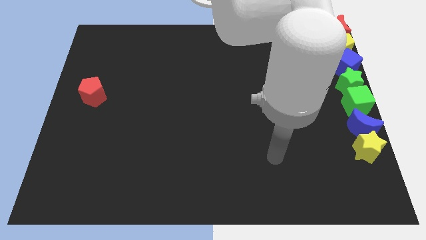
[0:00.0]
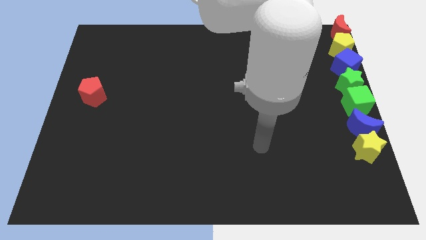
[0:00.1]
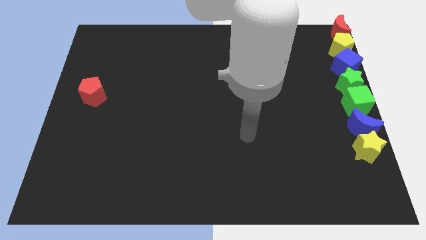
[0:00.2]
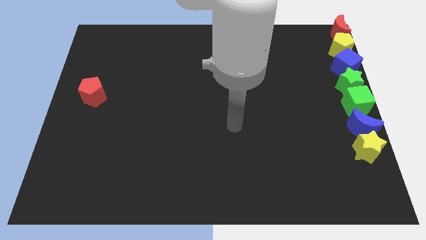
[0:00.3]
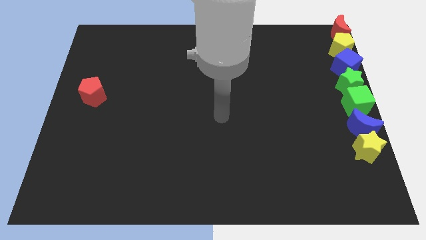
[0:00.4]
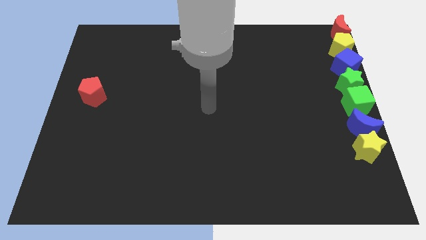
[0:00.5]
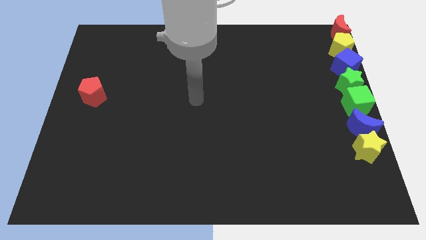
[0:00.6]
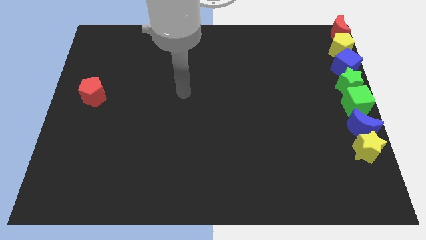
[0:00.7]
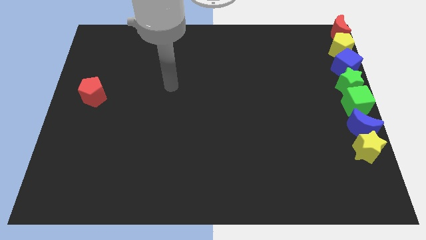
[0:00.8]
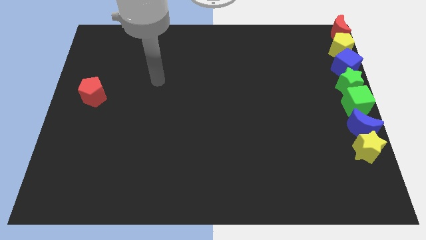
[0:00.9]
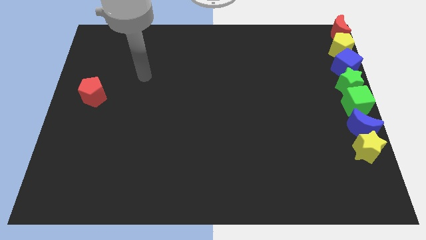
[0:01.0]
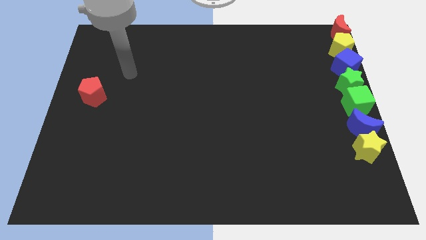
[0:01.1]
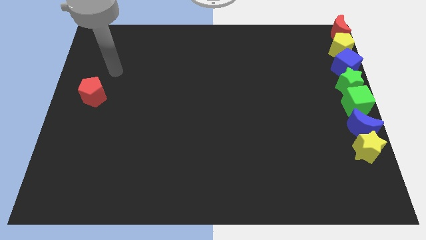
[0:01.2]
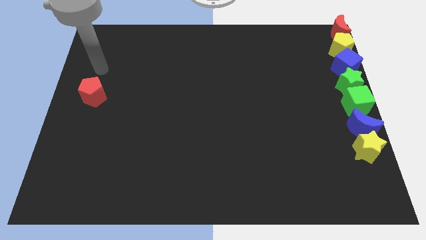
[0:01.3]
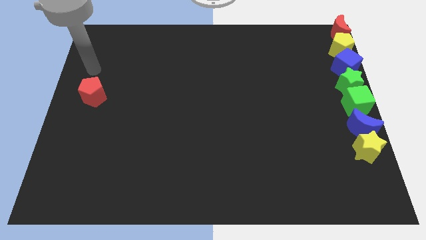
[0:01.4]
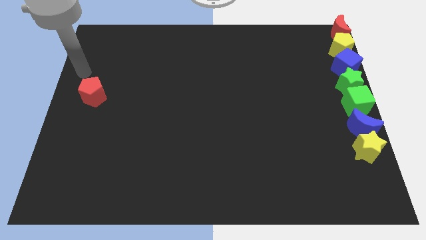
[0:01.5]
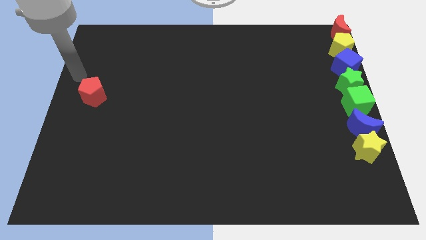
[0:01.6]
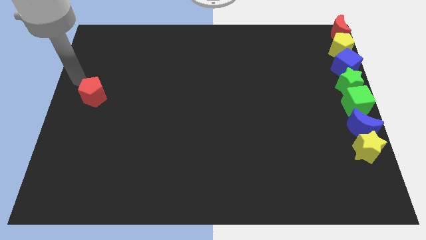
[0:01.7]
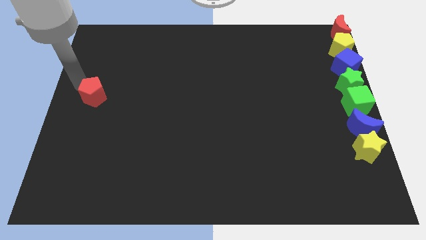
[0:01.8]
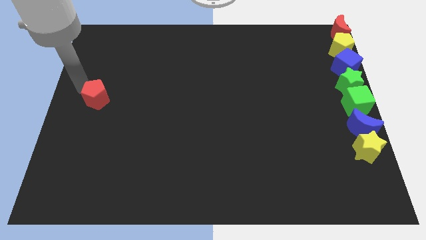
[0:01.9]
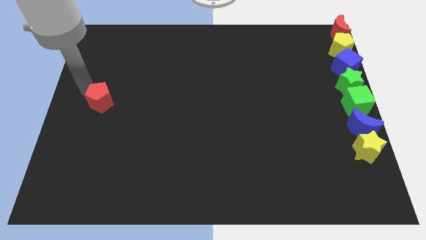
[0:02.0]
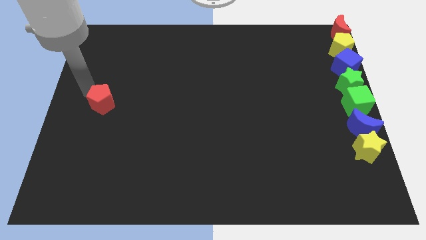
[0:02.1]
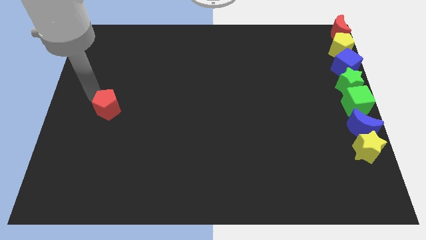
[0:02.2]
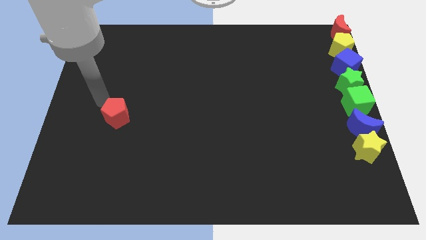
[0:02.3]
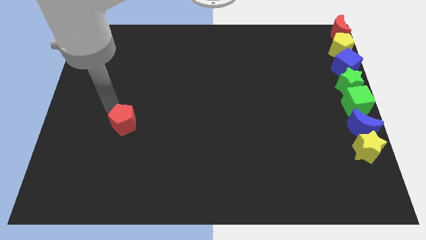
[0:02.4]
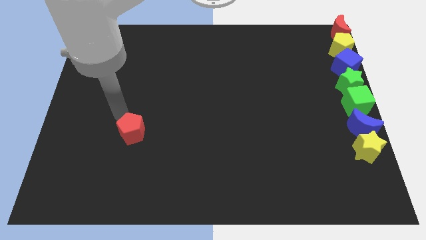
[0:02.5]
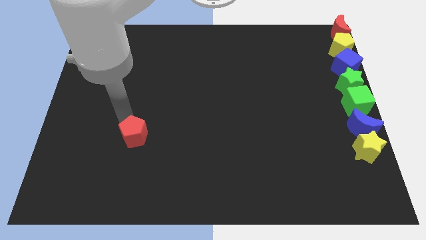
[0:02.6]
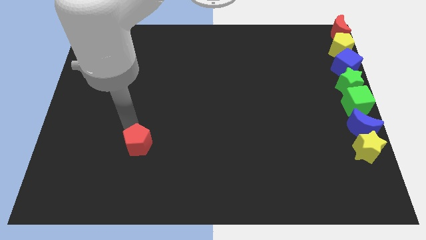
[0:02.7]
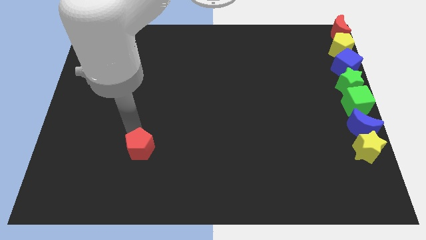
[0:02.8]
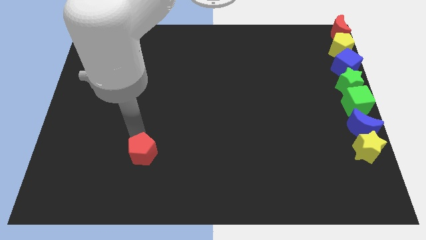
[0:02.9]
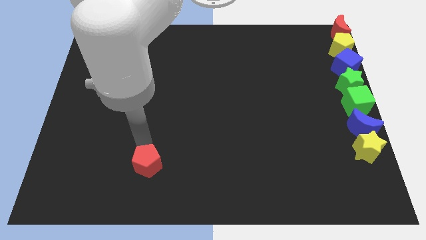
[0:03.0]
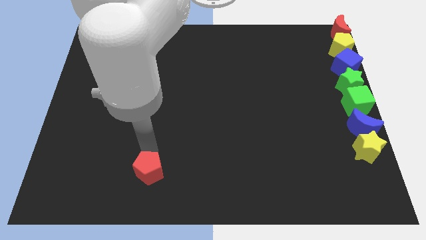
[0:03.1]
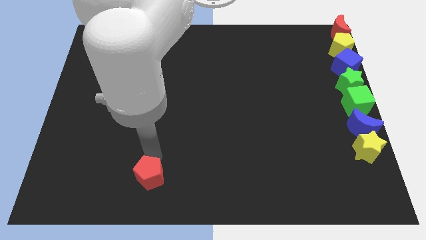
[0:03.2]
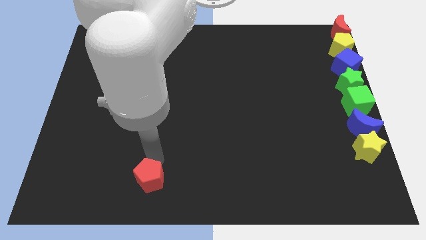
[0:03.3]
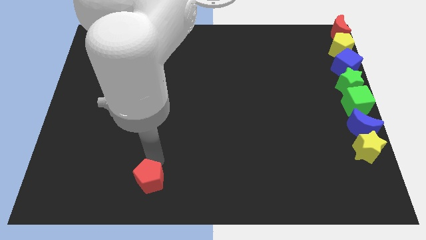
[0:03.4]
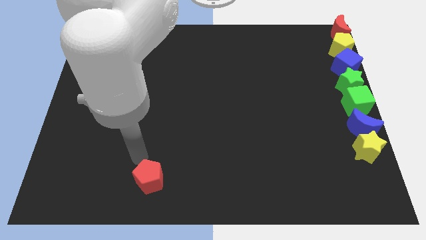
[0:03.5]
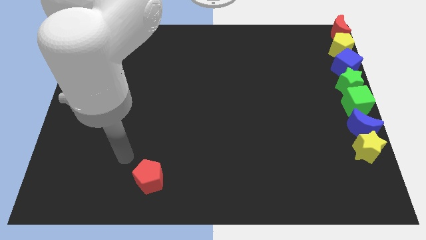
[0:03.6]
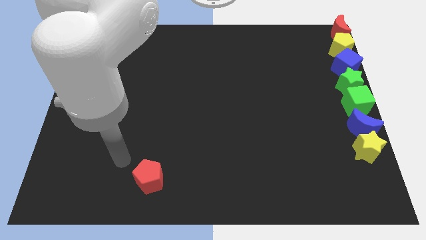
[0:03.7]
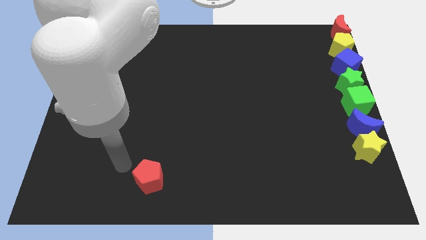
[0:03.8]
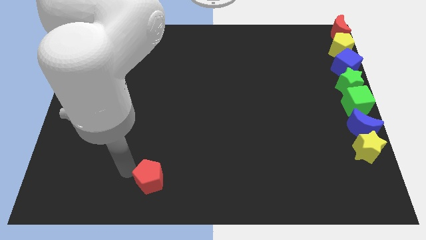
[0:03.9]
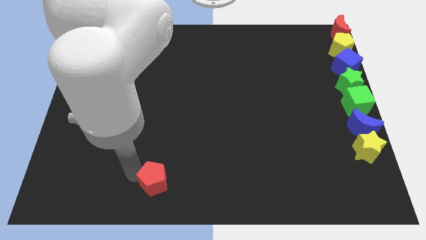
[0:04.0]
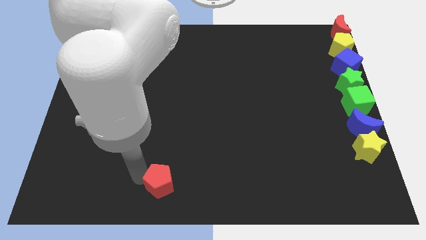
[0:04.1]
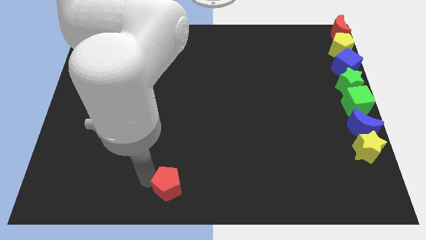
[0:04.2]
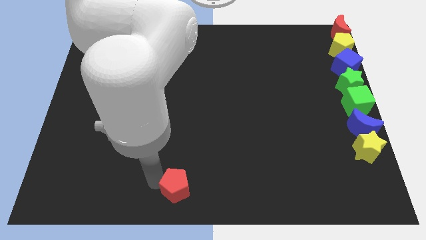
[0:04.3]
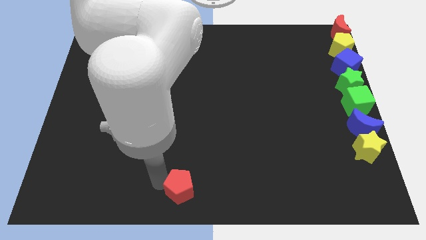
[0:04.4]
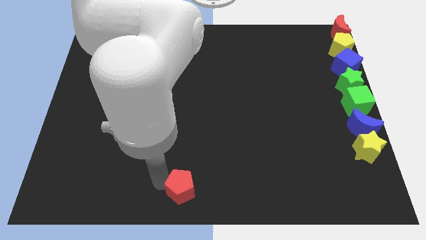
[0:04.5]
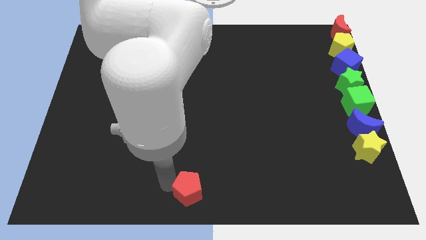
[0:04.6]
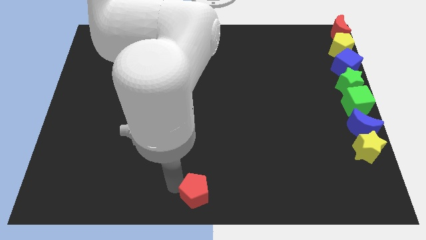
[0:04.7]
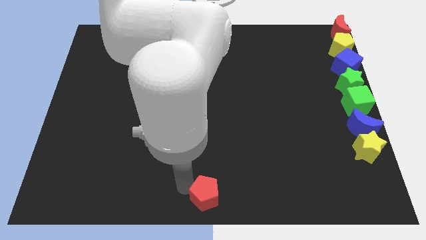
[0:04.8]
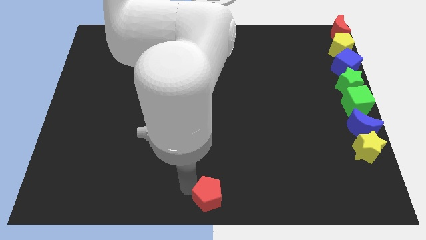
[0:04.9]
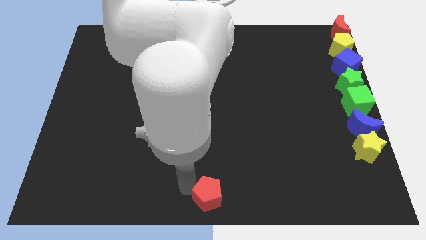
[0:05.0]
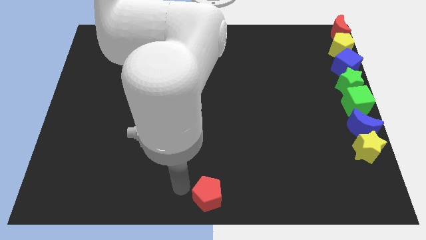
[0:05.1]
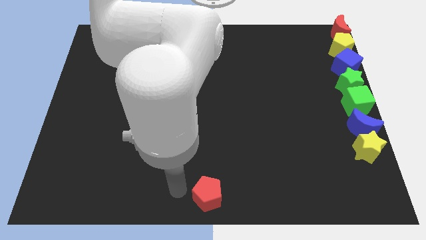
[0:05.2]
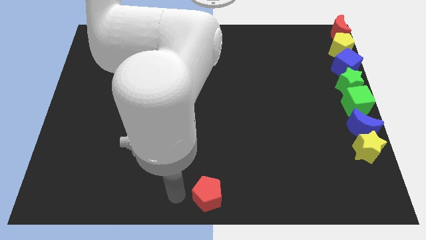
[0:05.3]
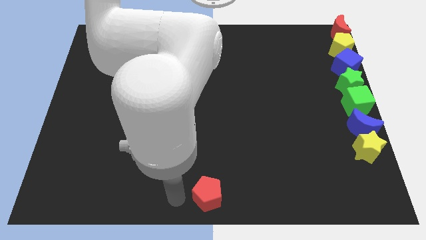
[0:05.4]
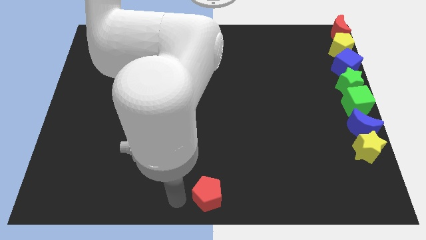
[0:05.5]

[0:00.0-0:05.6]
place the red pentagon at the bottom center of the board

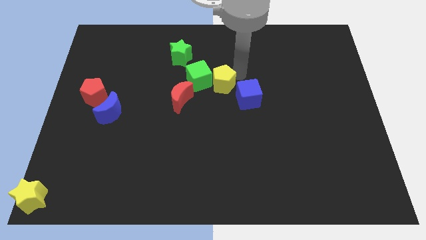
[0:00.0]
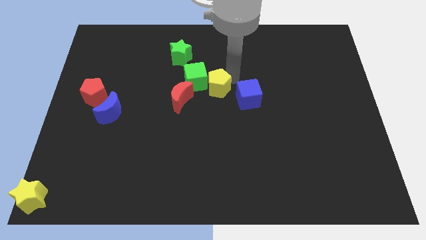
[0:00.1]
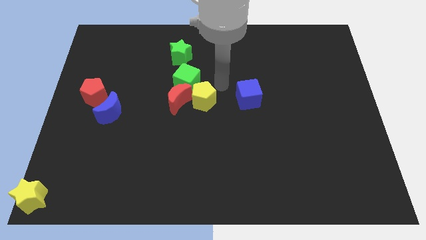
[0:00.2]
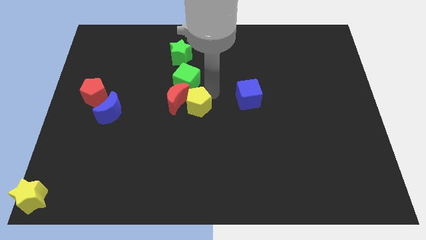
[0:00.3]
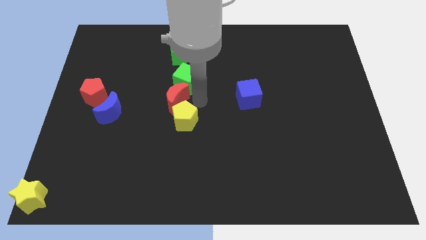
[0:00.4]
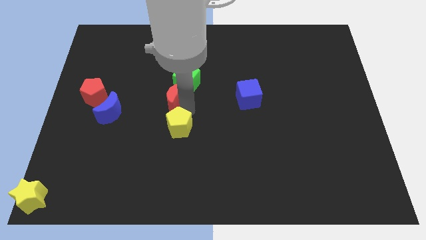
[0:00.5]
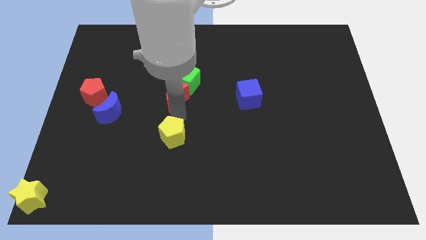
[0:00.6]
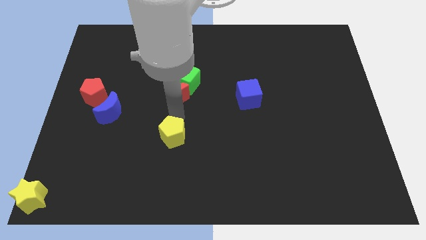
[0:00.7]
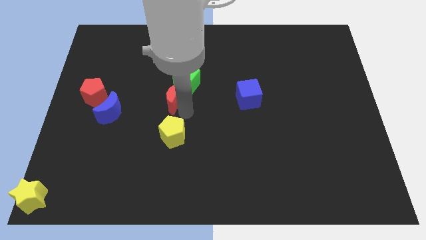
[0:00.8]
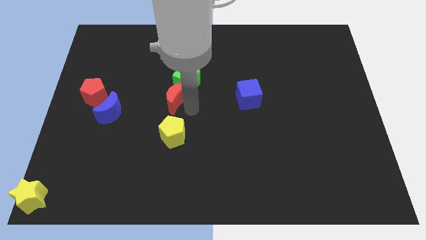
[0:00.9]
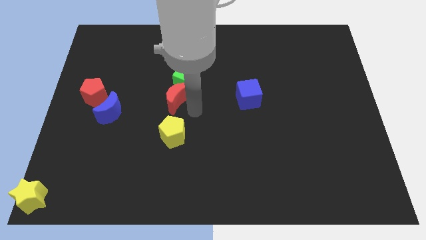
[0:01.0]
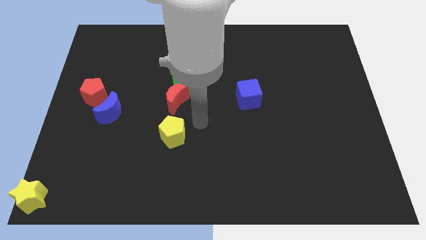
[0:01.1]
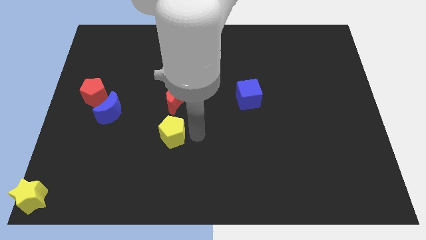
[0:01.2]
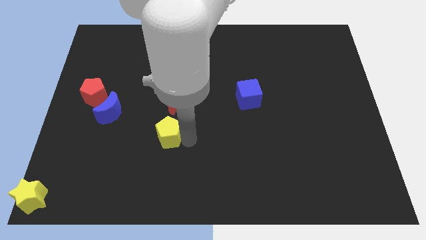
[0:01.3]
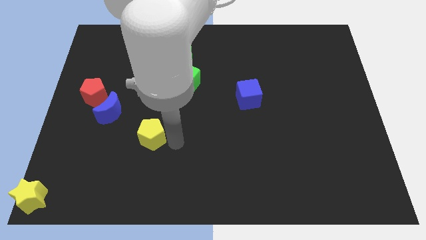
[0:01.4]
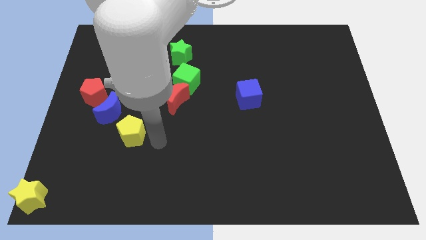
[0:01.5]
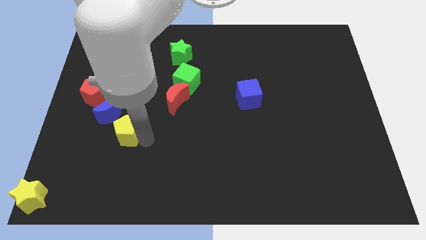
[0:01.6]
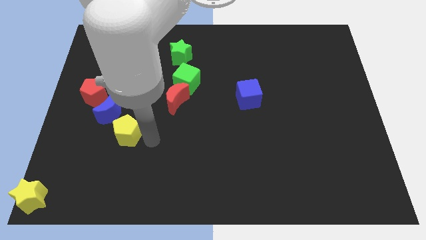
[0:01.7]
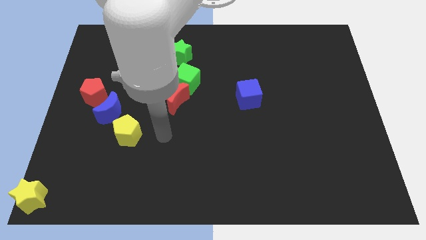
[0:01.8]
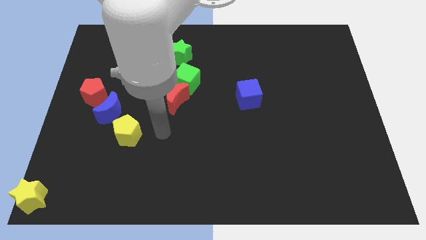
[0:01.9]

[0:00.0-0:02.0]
push the yellow pentagon close to the blue moon

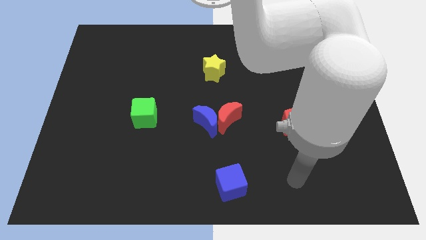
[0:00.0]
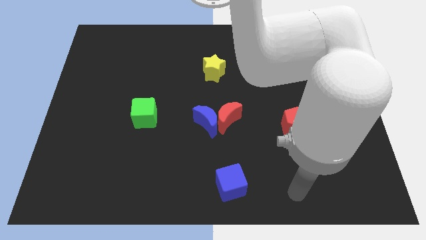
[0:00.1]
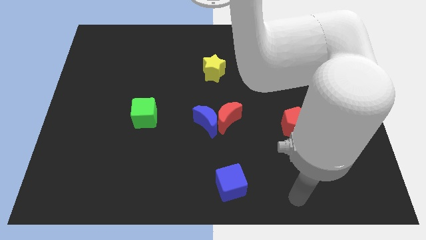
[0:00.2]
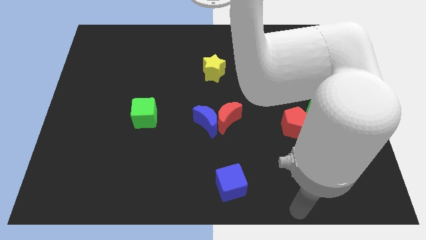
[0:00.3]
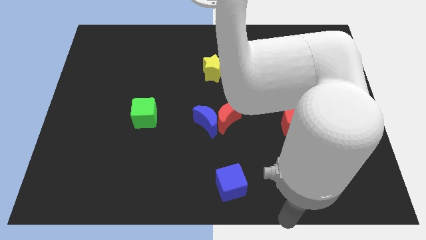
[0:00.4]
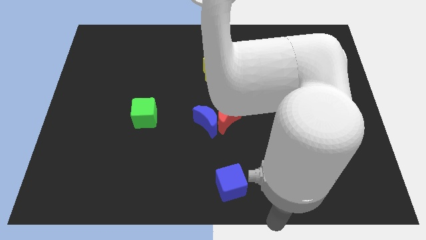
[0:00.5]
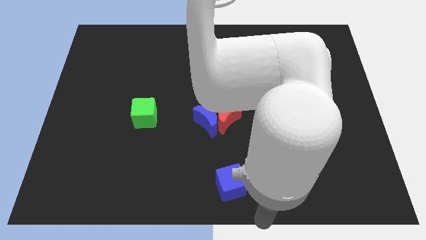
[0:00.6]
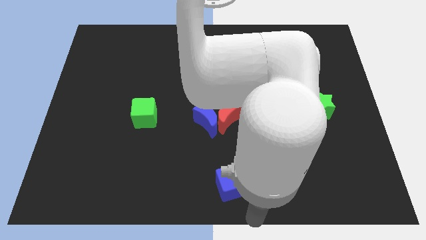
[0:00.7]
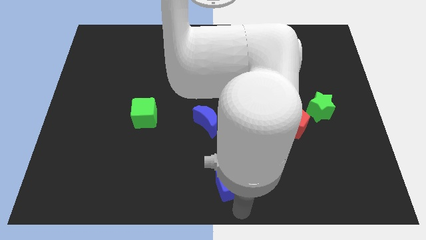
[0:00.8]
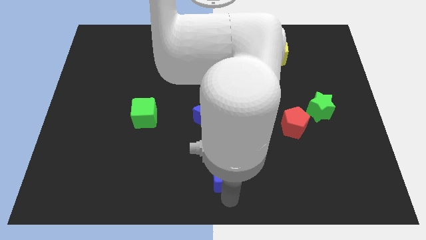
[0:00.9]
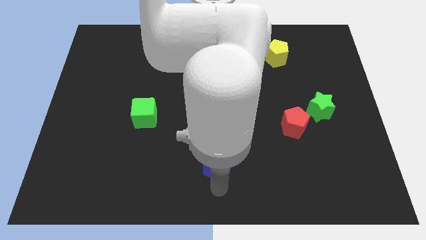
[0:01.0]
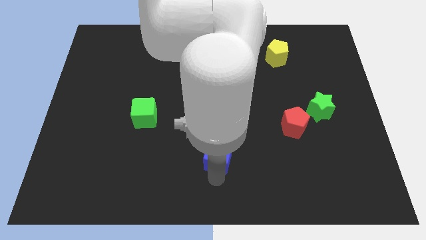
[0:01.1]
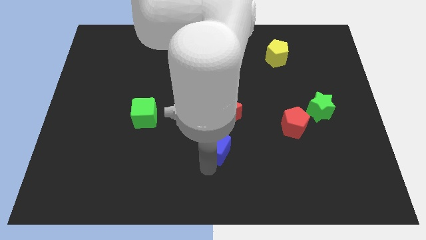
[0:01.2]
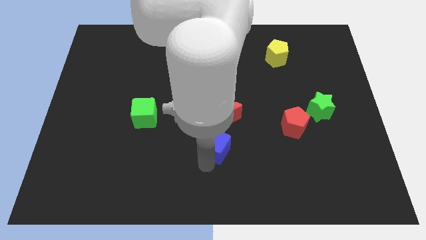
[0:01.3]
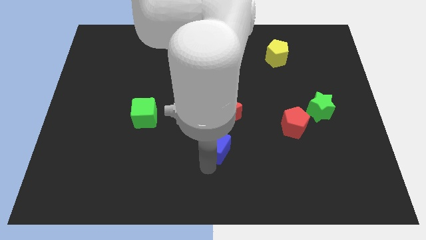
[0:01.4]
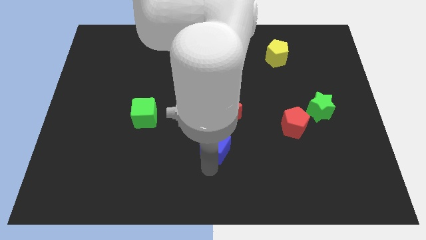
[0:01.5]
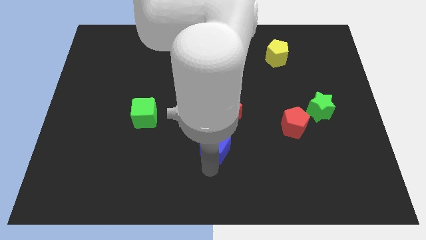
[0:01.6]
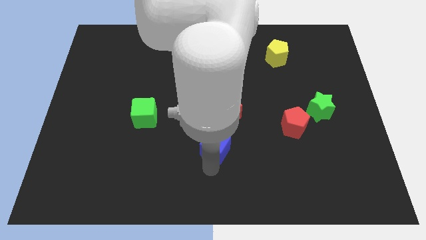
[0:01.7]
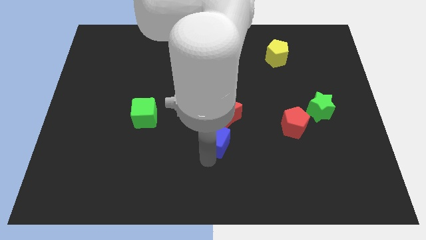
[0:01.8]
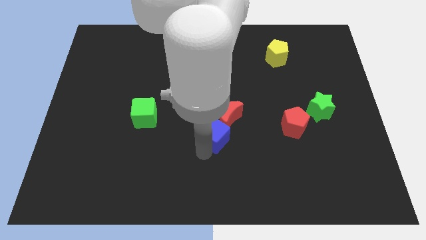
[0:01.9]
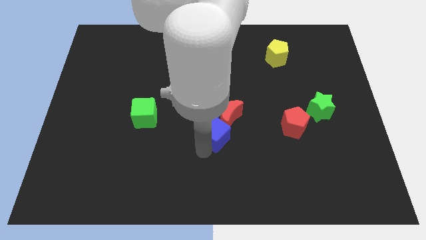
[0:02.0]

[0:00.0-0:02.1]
move the blue cube towards the center of the board
